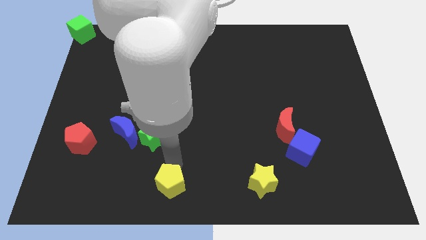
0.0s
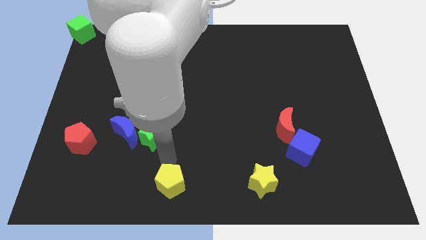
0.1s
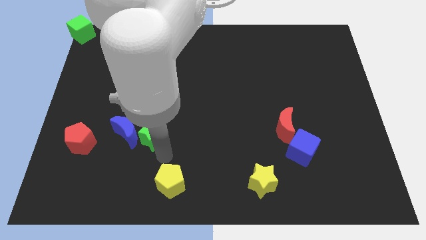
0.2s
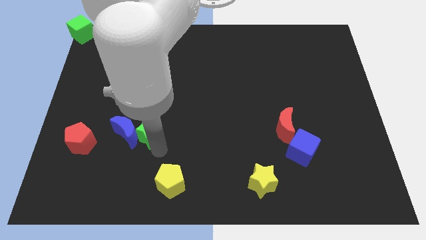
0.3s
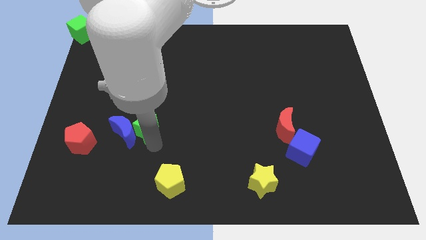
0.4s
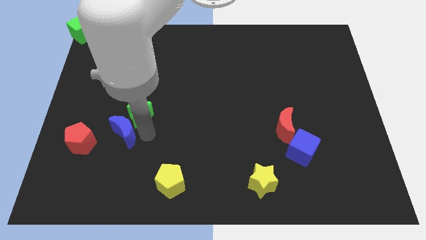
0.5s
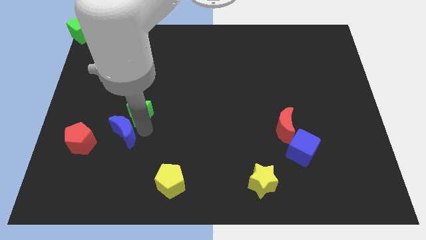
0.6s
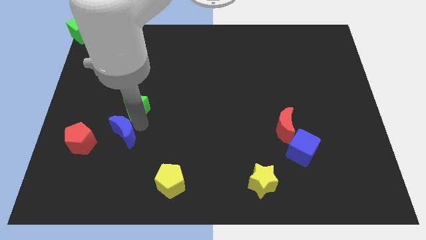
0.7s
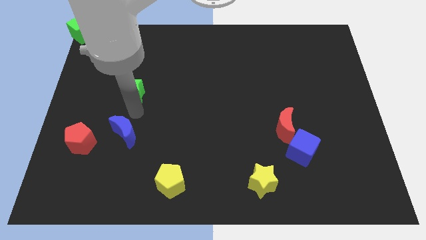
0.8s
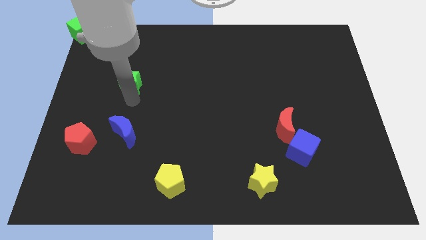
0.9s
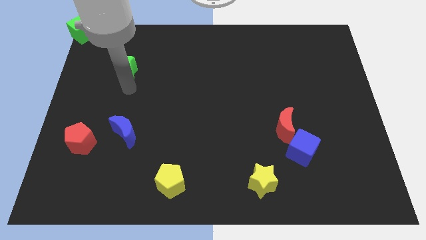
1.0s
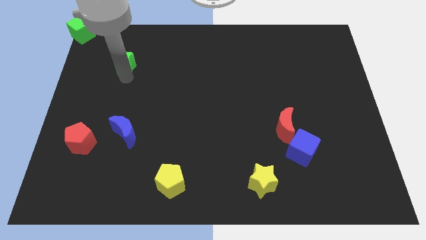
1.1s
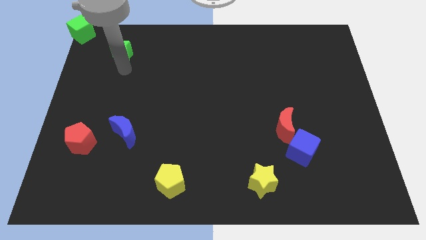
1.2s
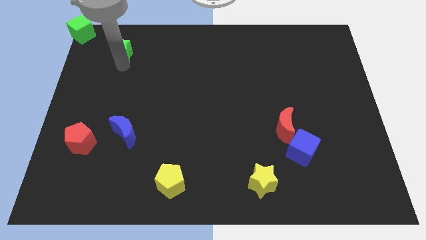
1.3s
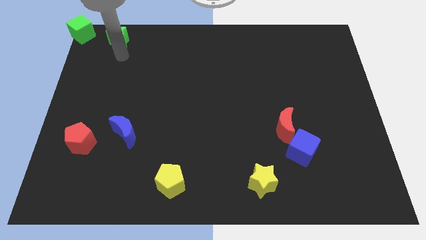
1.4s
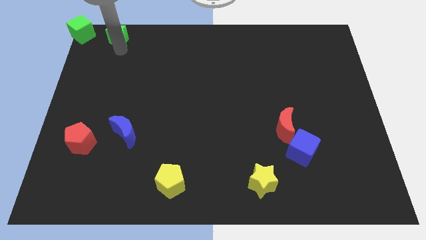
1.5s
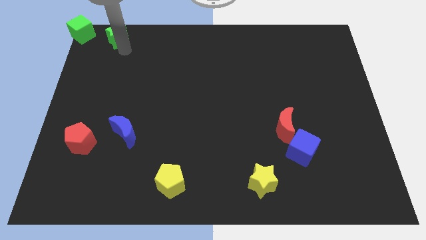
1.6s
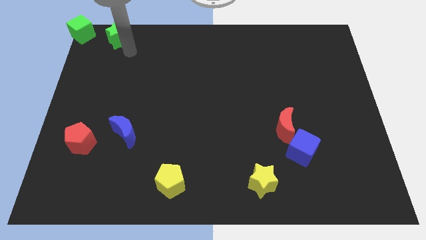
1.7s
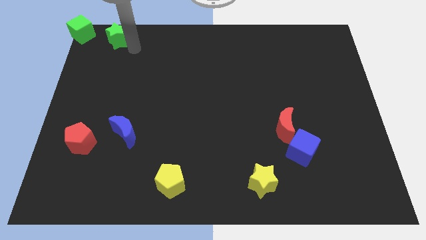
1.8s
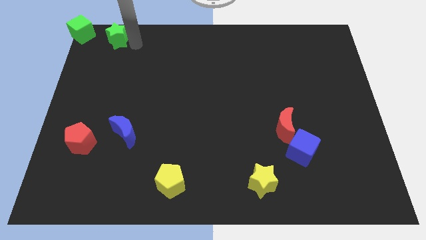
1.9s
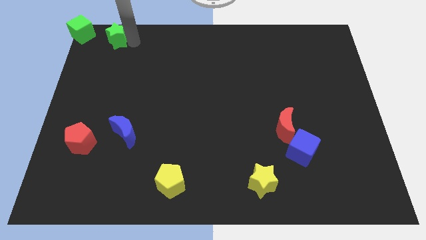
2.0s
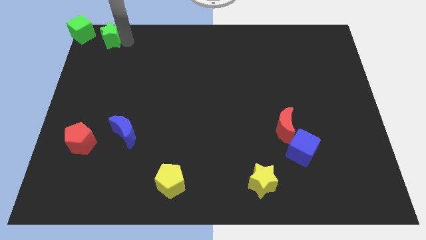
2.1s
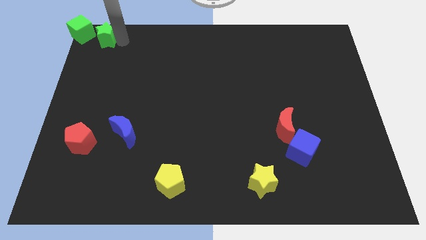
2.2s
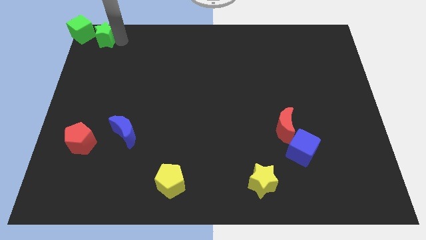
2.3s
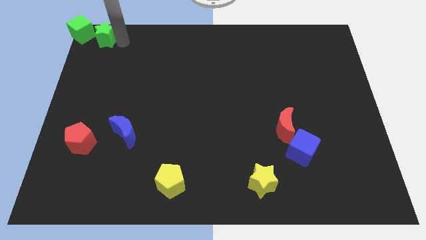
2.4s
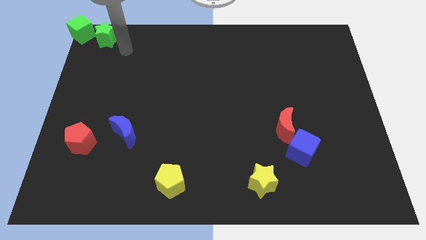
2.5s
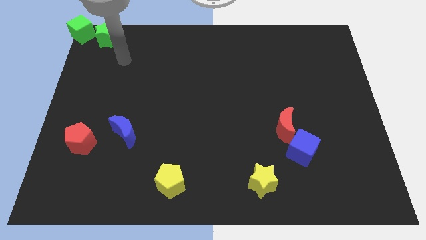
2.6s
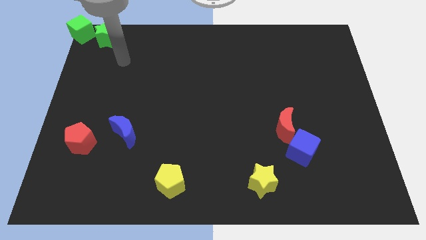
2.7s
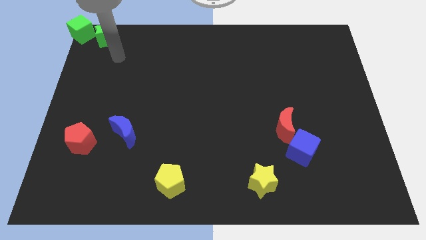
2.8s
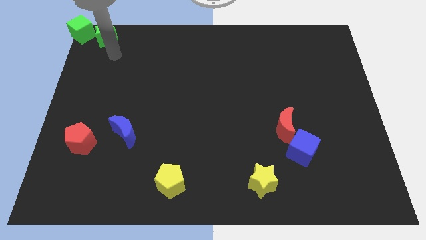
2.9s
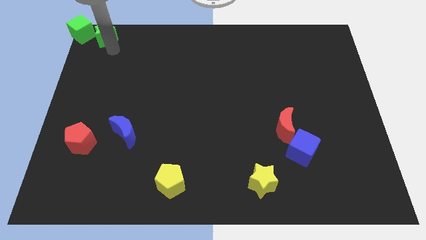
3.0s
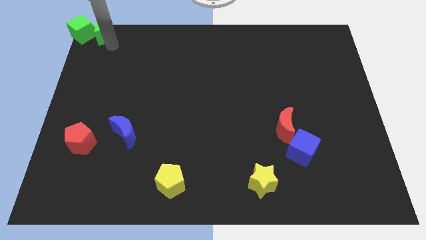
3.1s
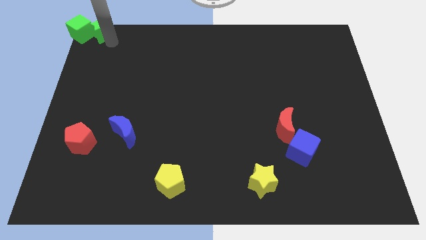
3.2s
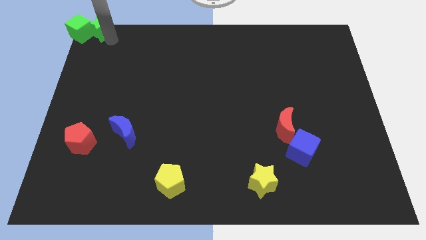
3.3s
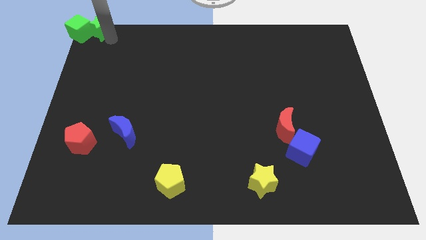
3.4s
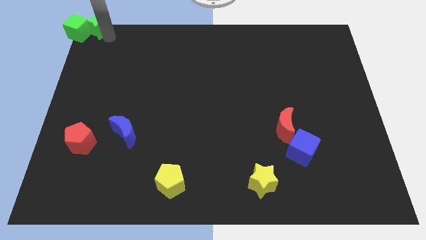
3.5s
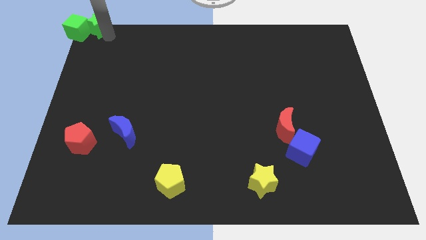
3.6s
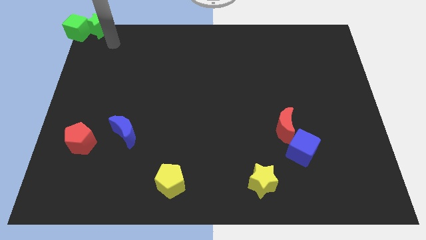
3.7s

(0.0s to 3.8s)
move the green star right to the green cube towards the top left corner

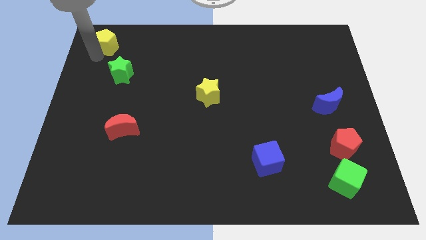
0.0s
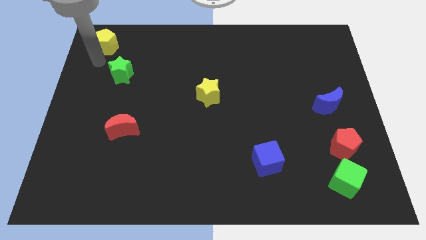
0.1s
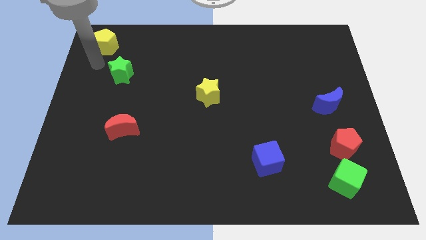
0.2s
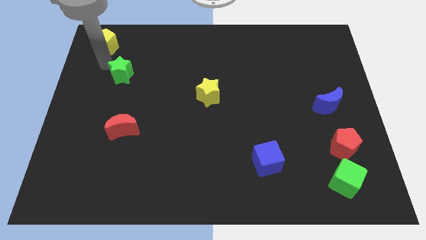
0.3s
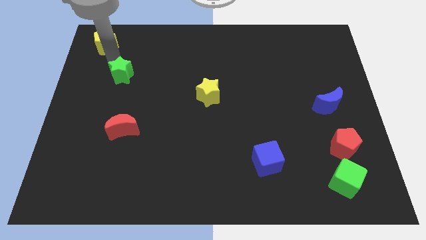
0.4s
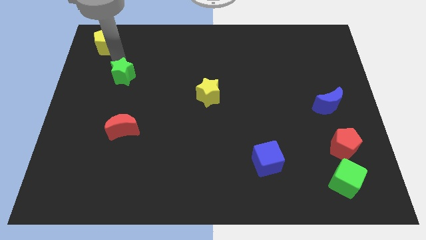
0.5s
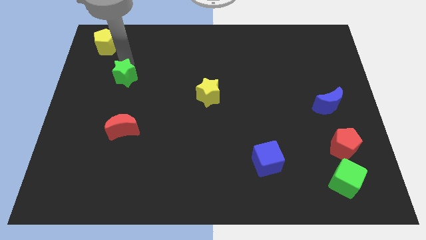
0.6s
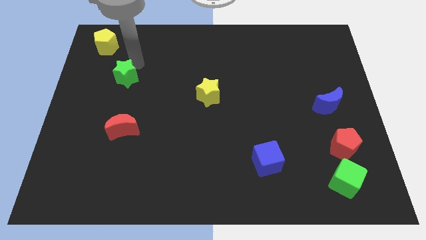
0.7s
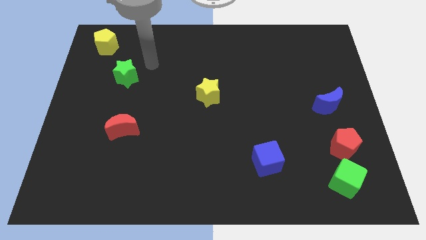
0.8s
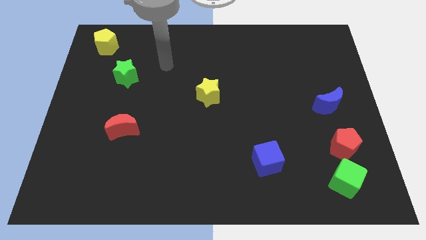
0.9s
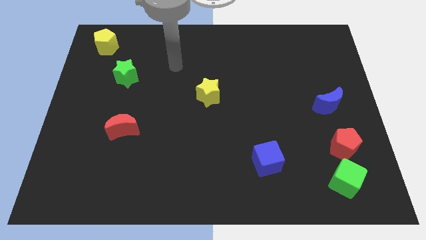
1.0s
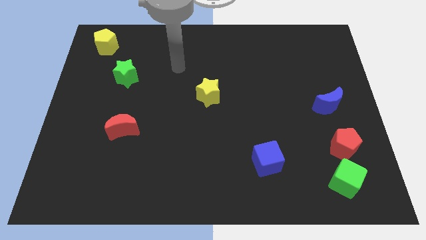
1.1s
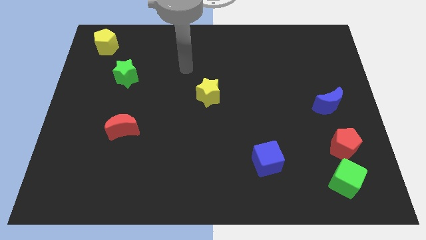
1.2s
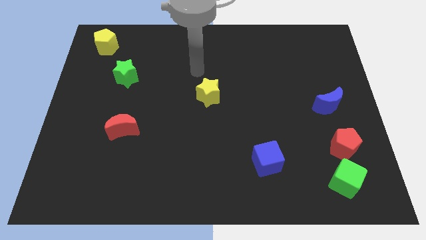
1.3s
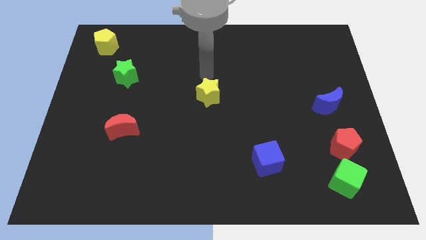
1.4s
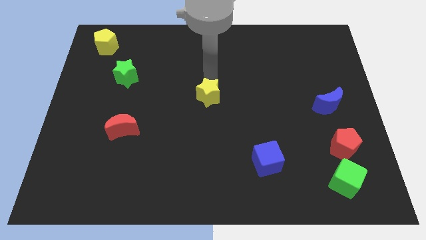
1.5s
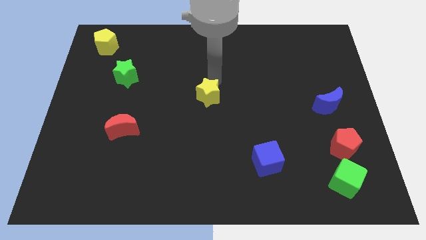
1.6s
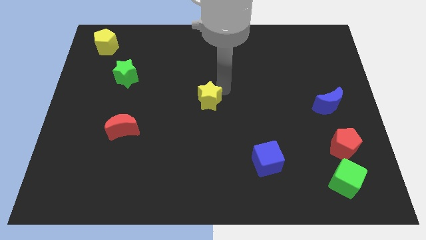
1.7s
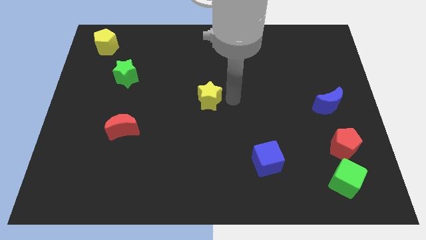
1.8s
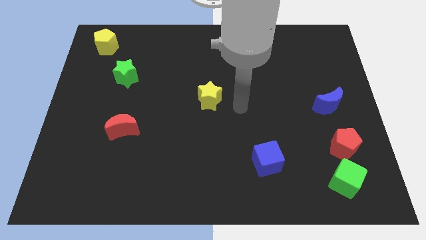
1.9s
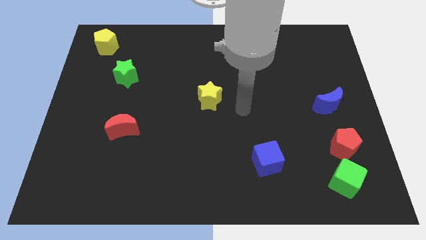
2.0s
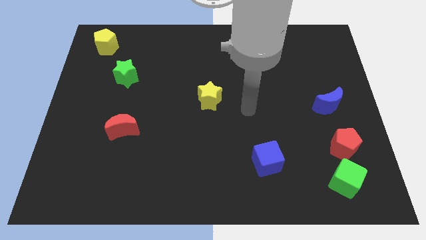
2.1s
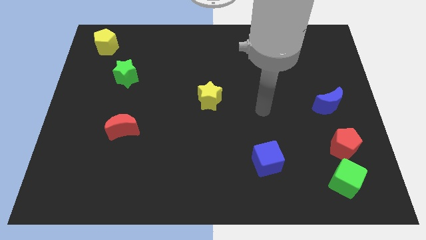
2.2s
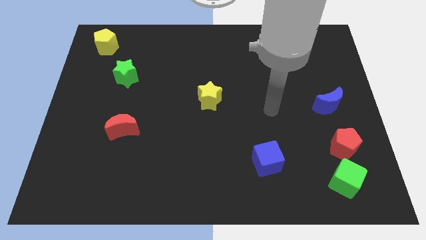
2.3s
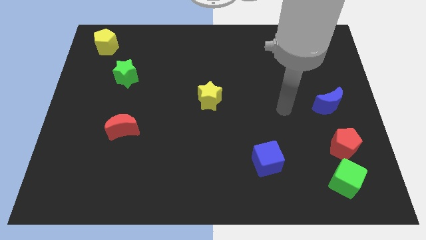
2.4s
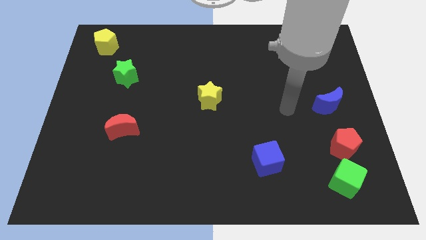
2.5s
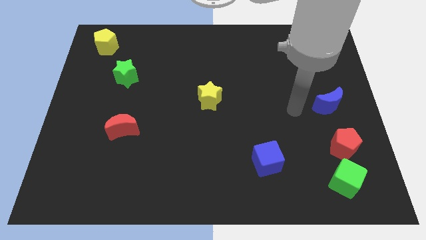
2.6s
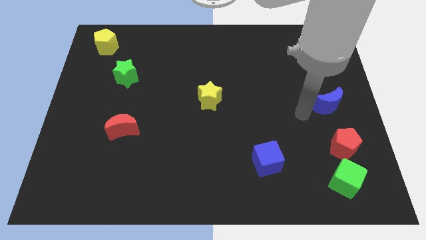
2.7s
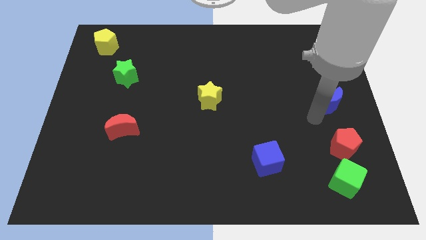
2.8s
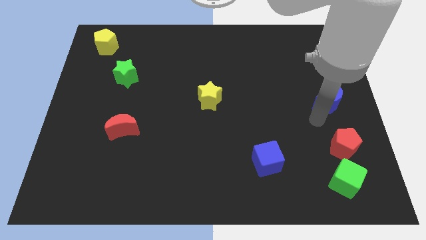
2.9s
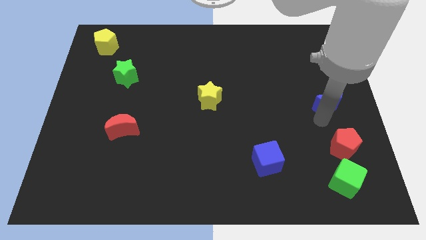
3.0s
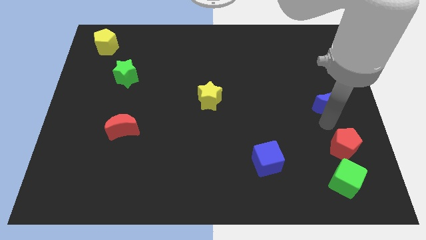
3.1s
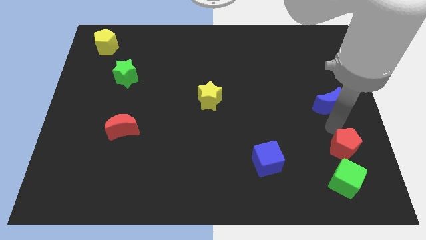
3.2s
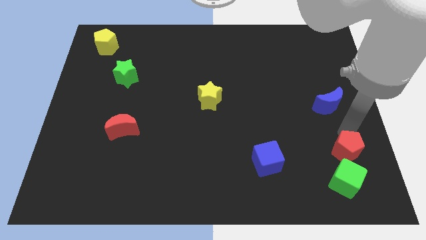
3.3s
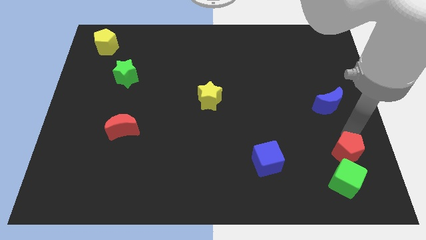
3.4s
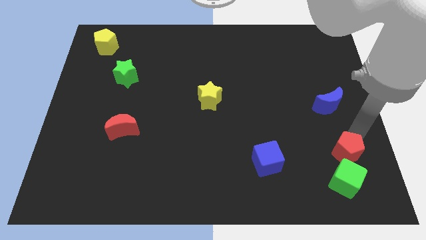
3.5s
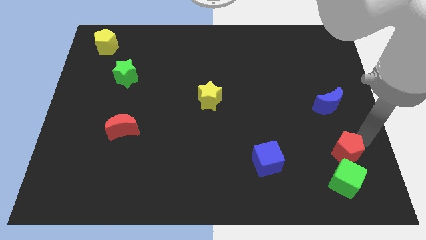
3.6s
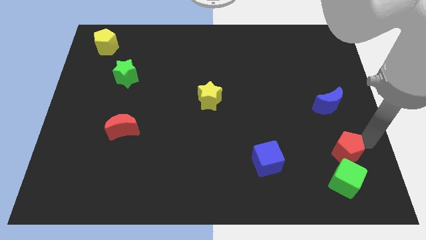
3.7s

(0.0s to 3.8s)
move the arm towards the red pentagon

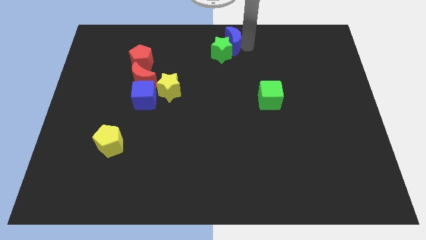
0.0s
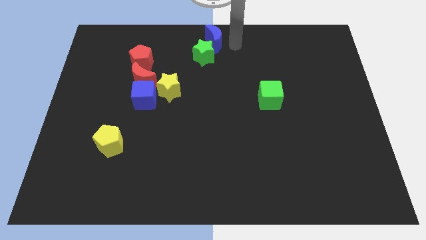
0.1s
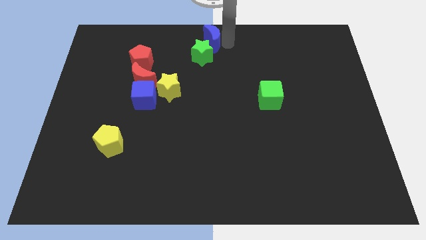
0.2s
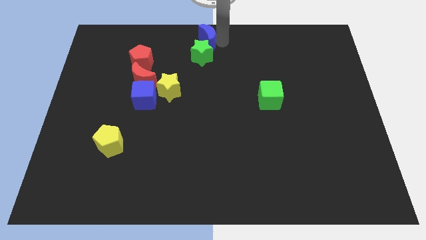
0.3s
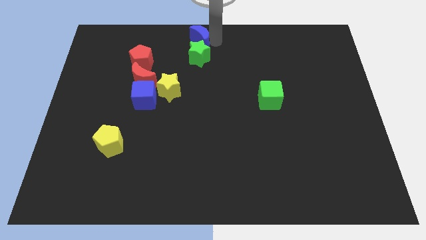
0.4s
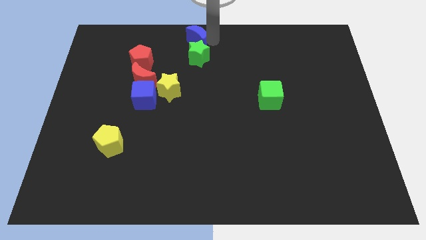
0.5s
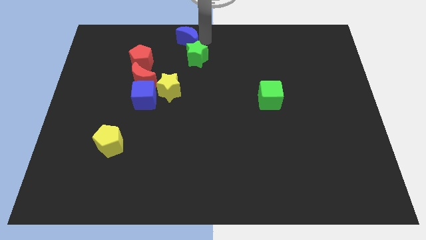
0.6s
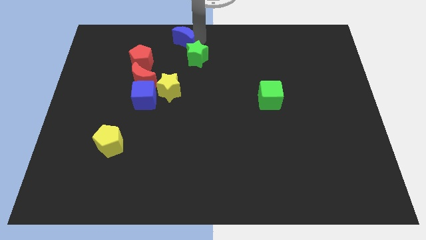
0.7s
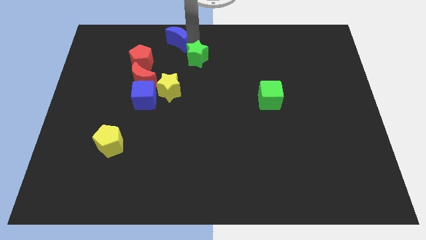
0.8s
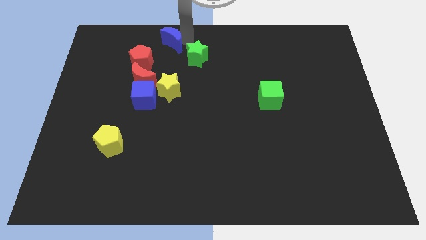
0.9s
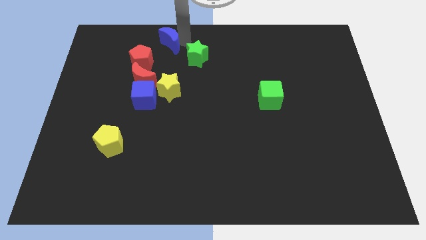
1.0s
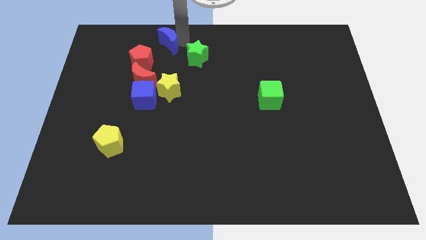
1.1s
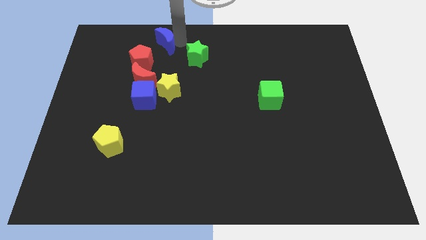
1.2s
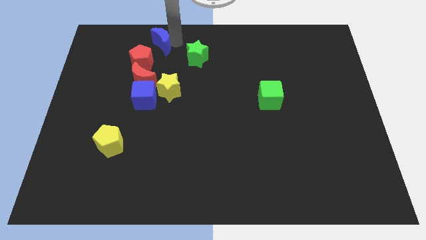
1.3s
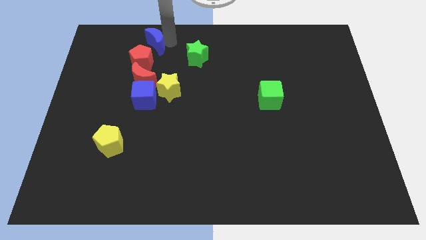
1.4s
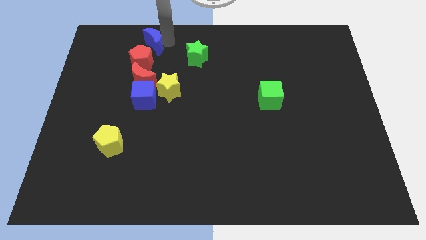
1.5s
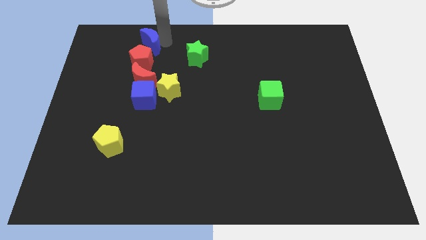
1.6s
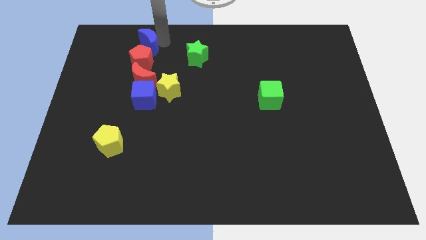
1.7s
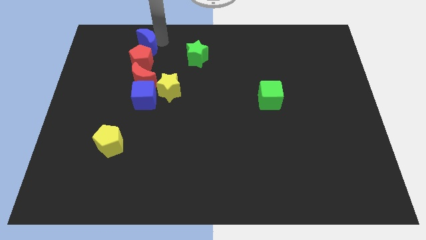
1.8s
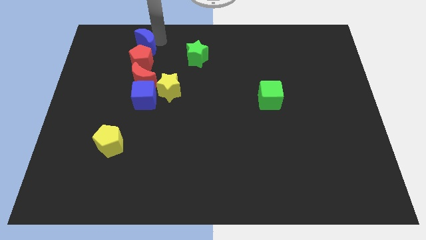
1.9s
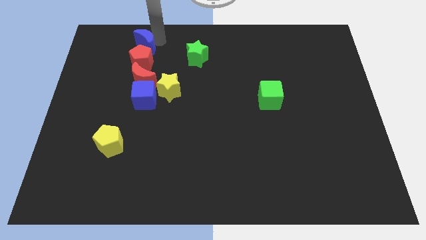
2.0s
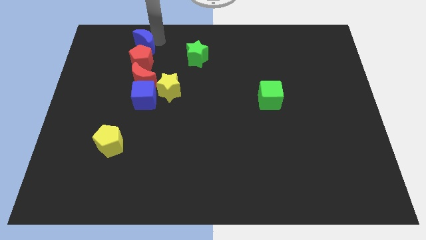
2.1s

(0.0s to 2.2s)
put the blue moon above the red pentagon
